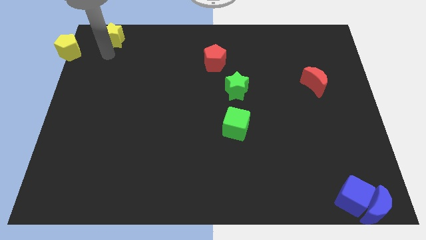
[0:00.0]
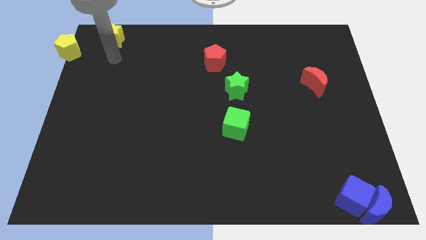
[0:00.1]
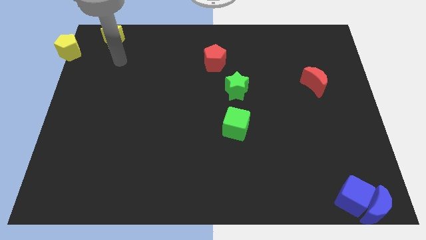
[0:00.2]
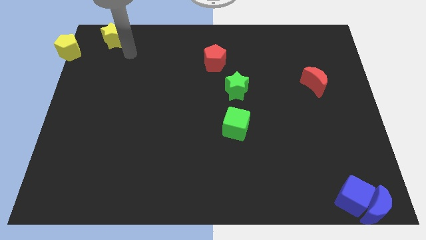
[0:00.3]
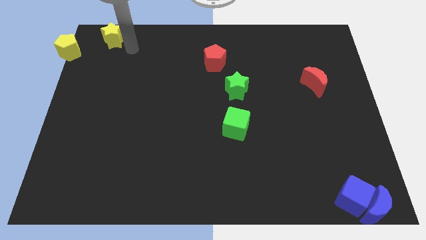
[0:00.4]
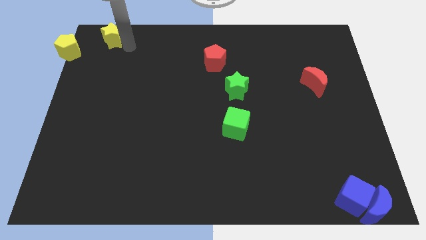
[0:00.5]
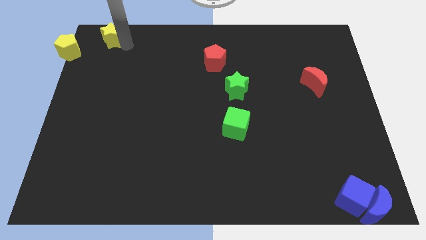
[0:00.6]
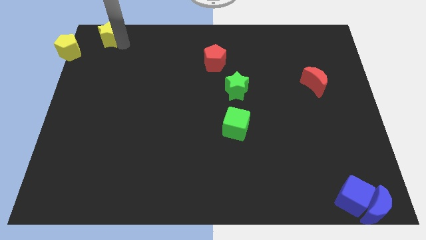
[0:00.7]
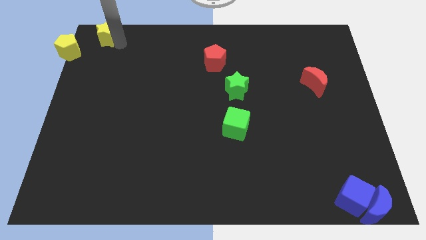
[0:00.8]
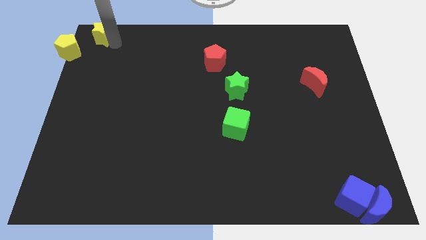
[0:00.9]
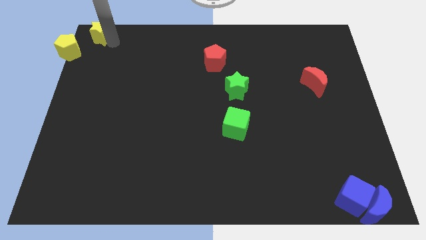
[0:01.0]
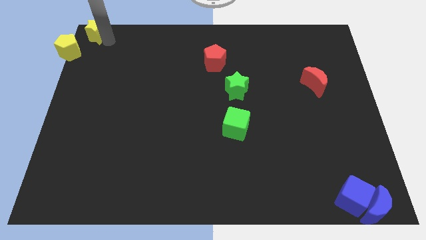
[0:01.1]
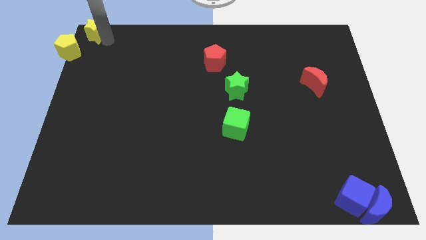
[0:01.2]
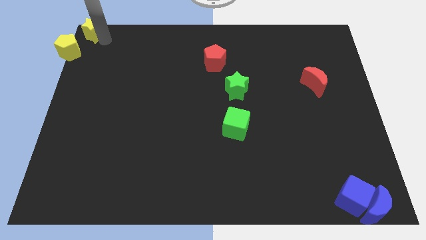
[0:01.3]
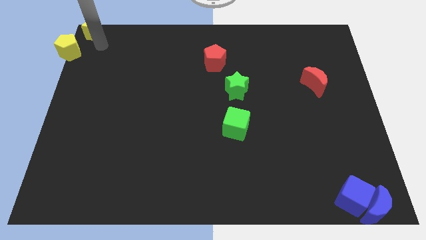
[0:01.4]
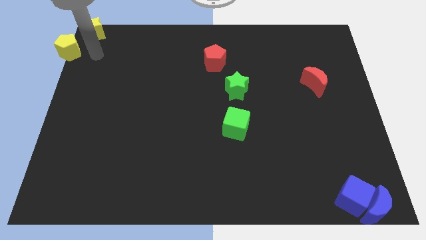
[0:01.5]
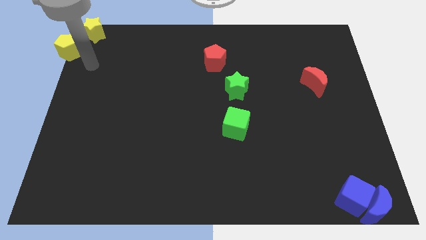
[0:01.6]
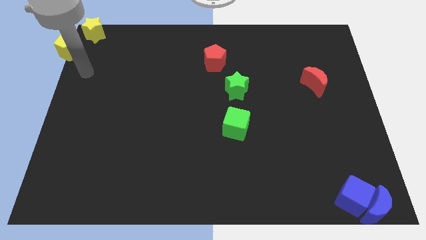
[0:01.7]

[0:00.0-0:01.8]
move the yellow star to the top left corner of the board

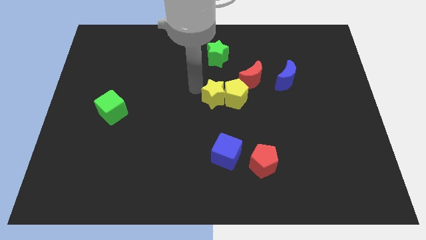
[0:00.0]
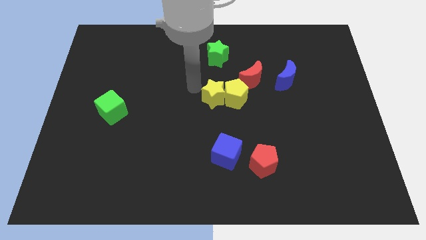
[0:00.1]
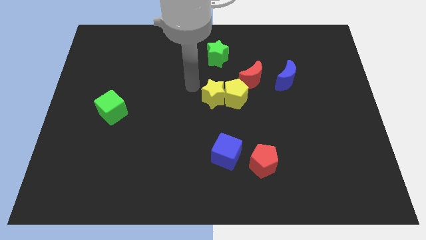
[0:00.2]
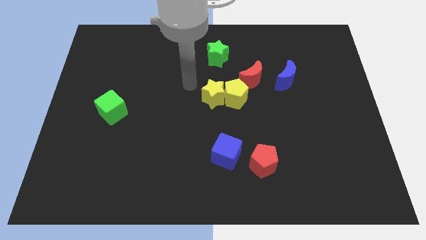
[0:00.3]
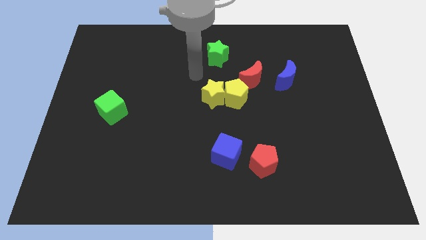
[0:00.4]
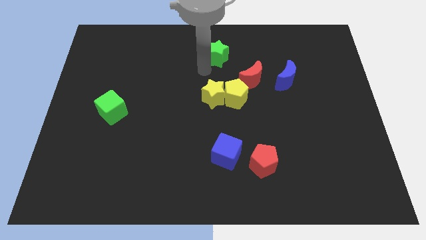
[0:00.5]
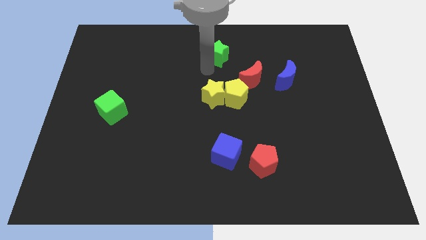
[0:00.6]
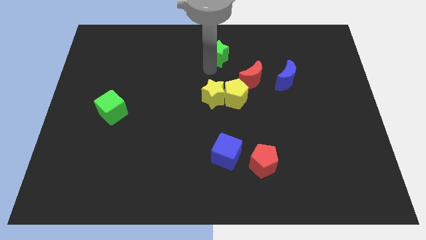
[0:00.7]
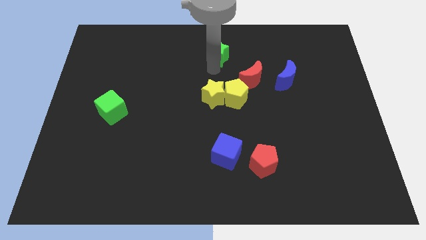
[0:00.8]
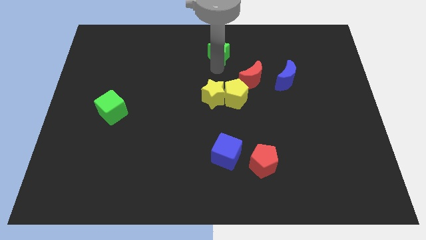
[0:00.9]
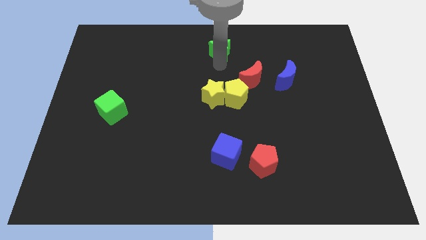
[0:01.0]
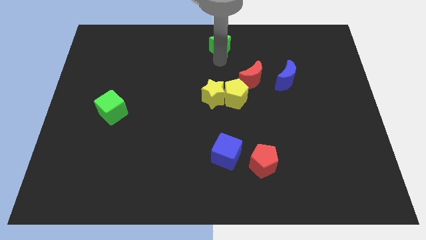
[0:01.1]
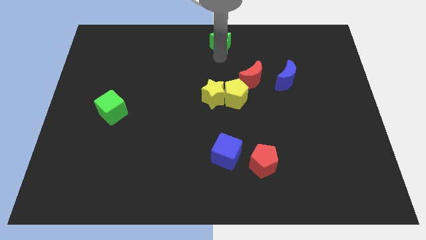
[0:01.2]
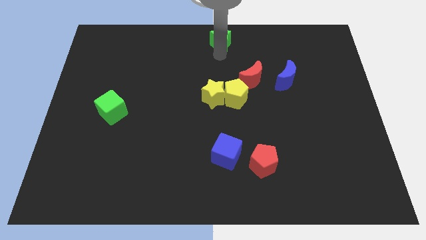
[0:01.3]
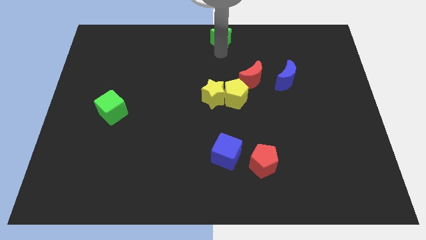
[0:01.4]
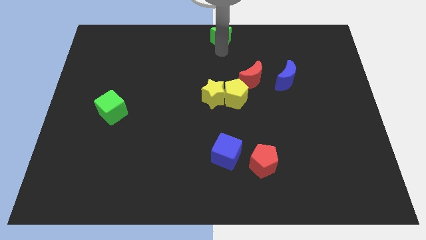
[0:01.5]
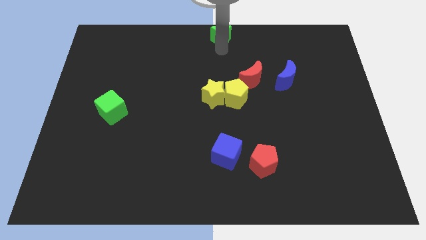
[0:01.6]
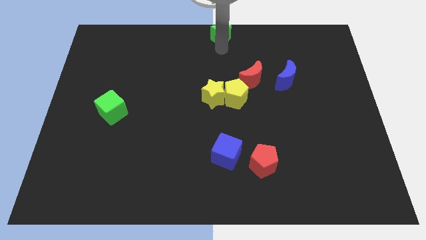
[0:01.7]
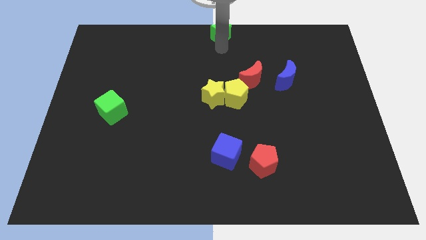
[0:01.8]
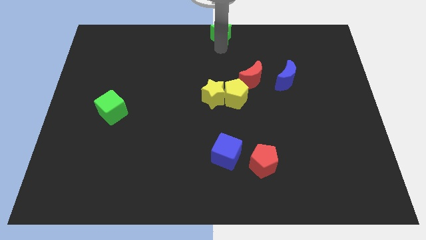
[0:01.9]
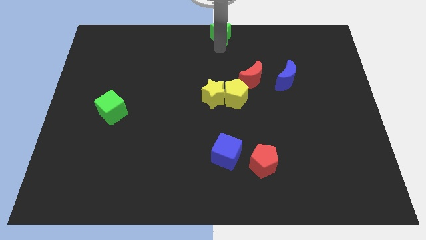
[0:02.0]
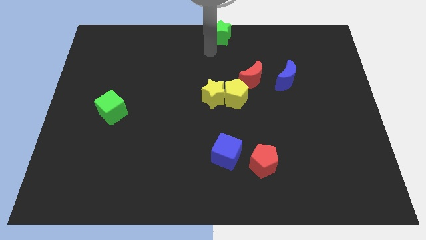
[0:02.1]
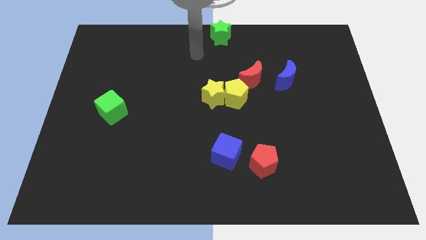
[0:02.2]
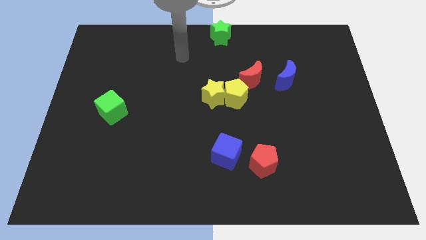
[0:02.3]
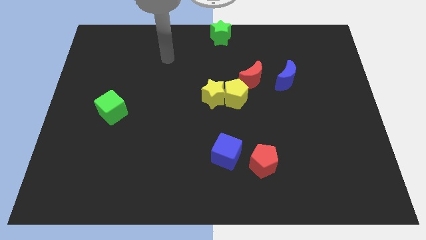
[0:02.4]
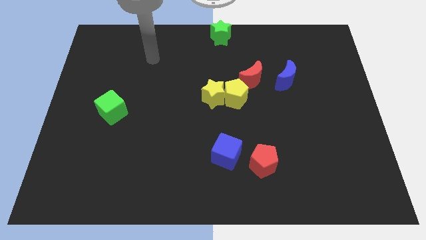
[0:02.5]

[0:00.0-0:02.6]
put the green star at the top center of the board

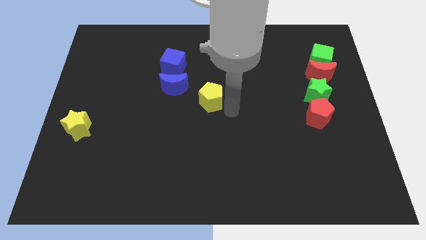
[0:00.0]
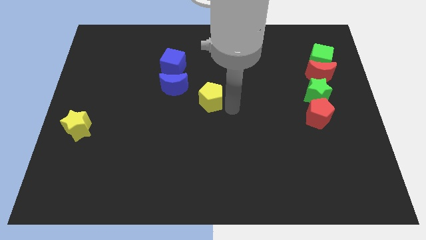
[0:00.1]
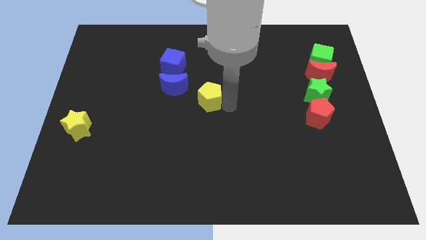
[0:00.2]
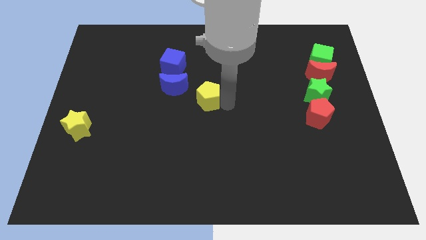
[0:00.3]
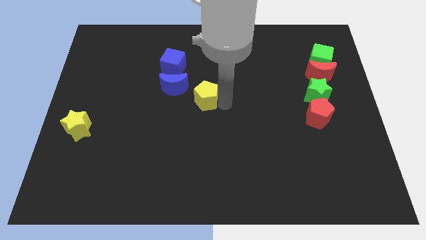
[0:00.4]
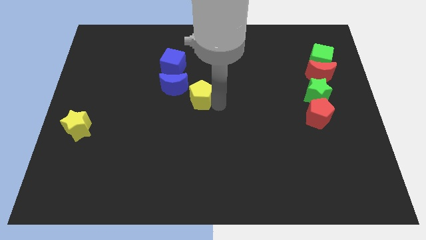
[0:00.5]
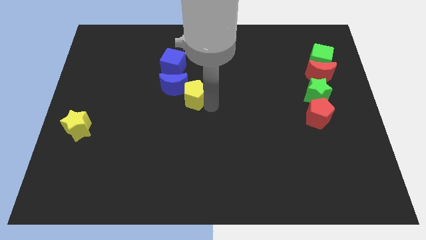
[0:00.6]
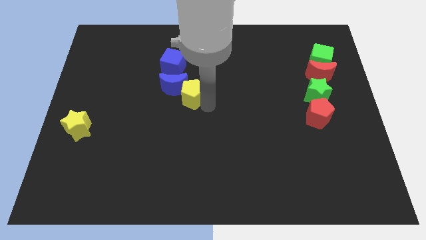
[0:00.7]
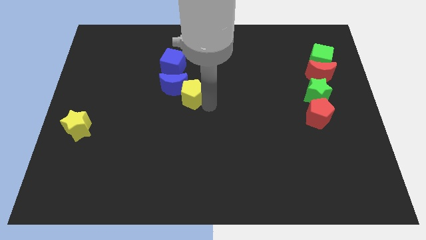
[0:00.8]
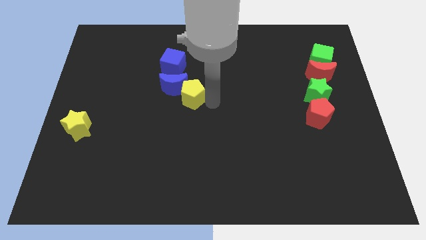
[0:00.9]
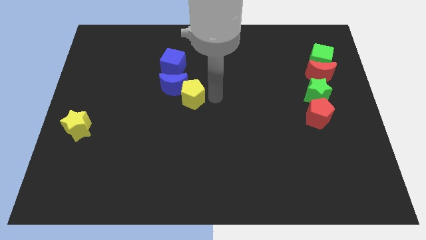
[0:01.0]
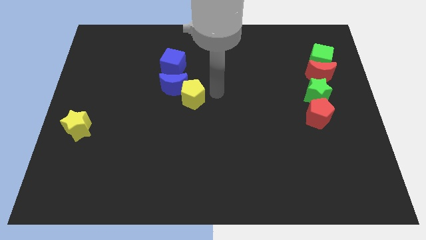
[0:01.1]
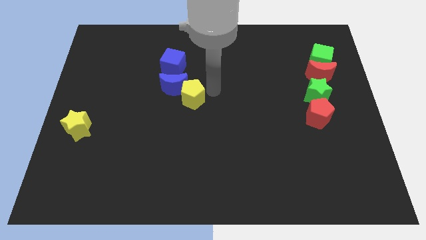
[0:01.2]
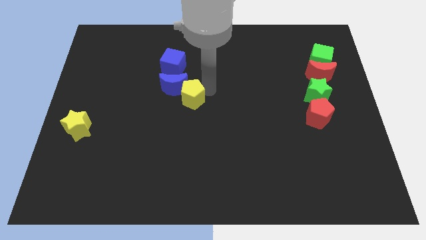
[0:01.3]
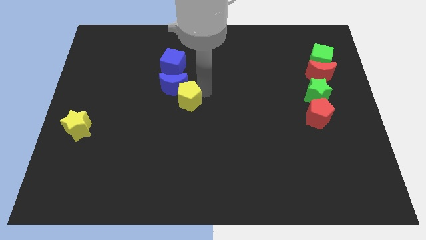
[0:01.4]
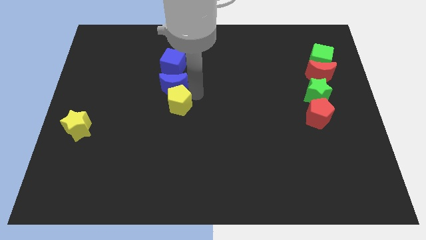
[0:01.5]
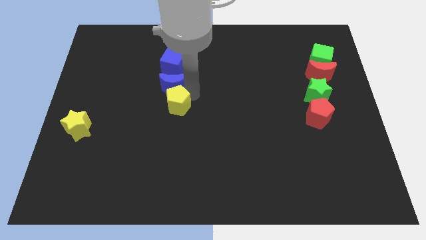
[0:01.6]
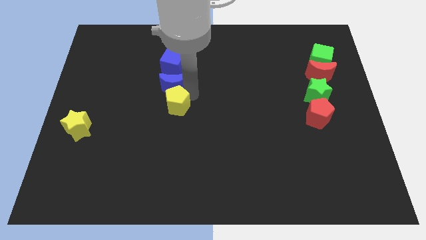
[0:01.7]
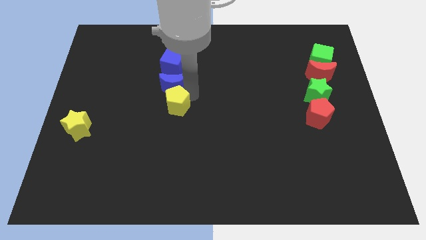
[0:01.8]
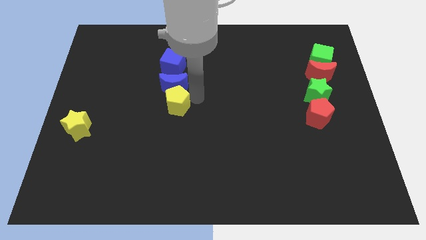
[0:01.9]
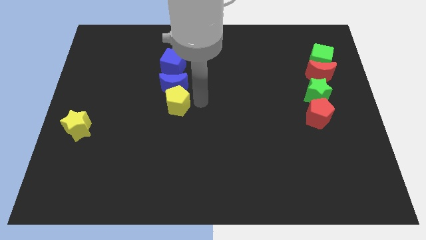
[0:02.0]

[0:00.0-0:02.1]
push the yellow pentagon into the blue moon and blue cube

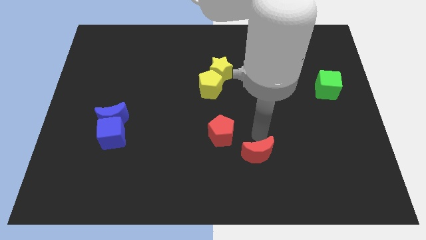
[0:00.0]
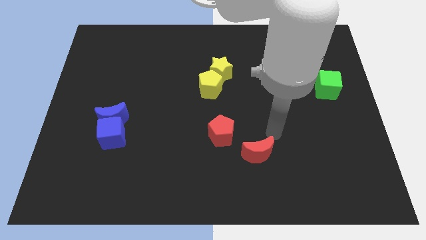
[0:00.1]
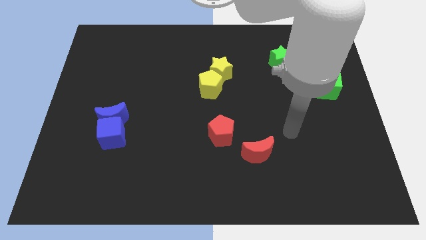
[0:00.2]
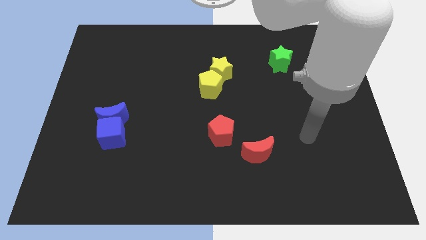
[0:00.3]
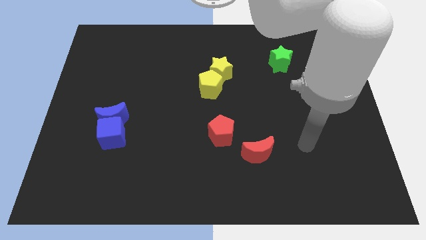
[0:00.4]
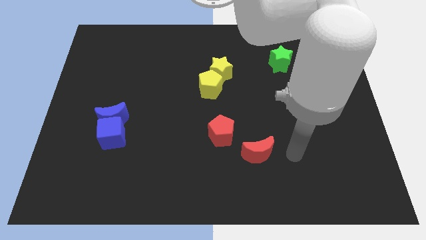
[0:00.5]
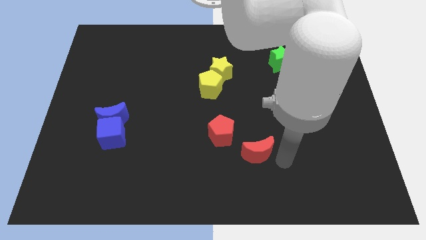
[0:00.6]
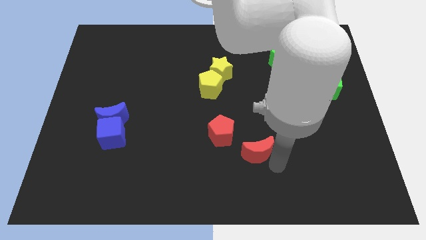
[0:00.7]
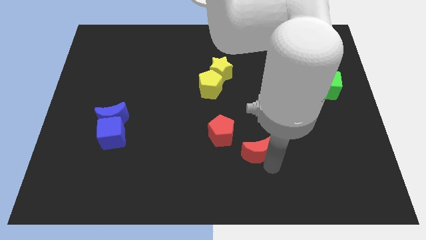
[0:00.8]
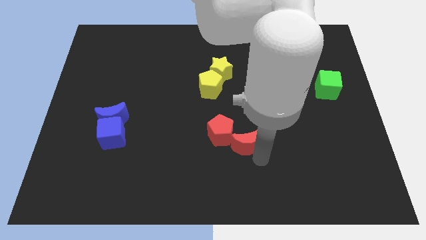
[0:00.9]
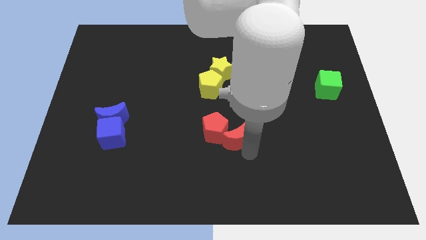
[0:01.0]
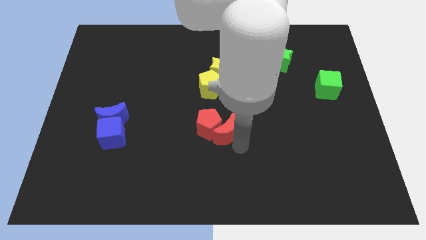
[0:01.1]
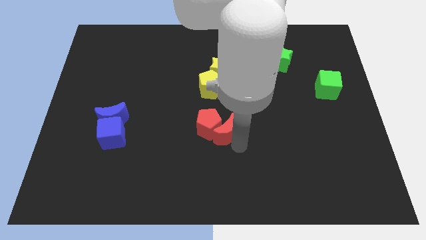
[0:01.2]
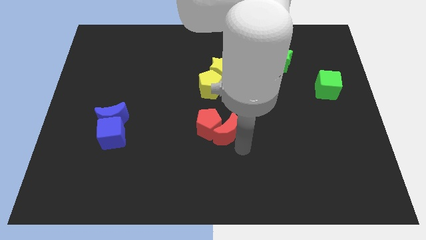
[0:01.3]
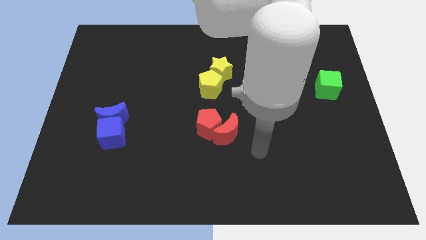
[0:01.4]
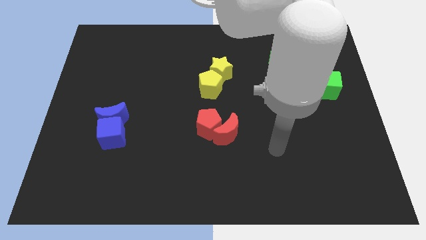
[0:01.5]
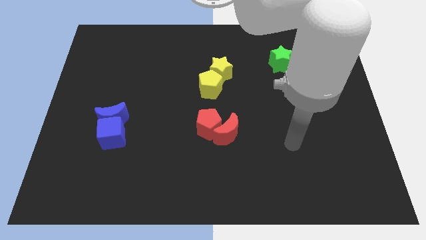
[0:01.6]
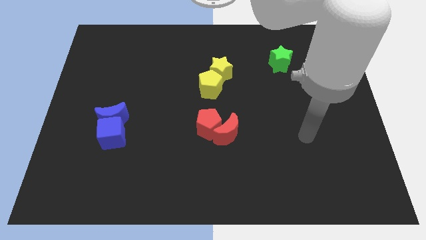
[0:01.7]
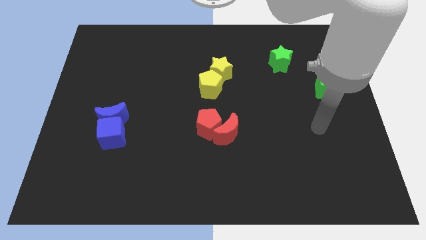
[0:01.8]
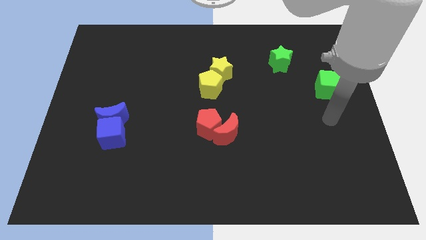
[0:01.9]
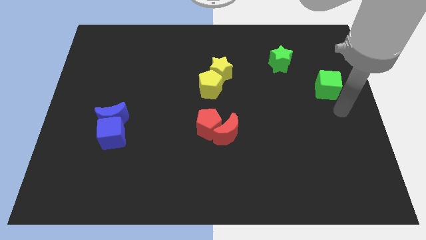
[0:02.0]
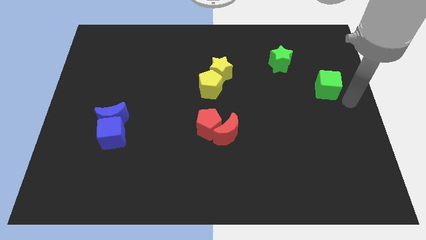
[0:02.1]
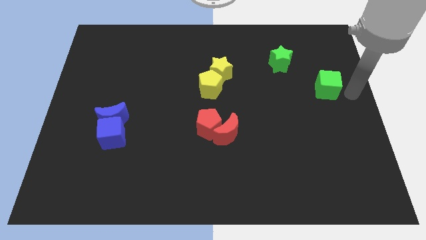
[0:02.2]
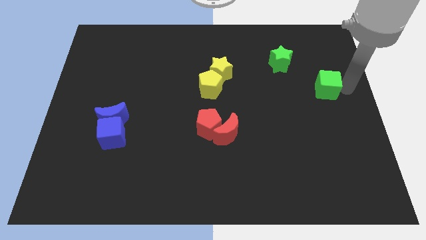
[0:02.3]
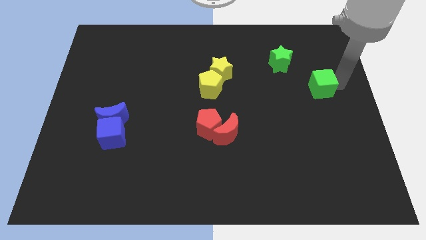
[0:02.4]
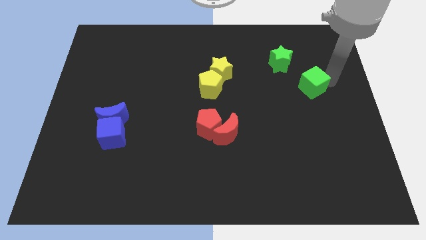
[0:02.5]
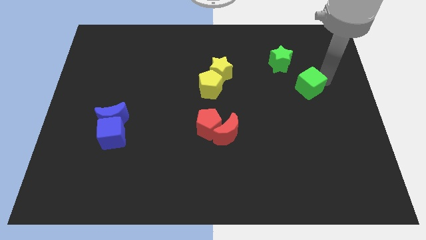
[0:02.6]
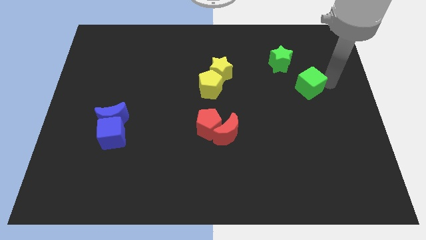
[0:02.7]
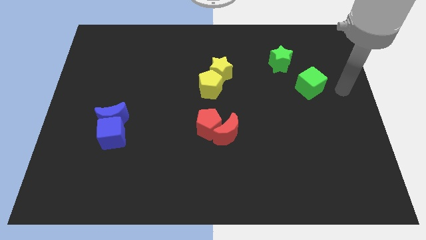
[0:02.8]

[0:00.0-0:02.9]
push the green cube and red moon to the left
